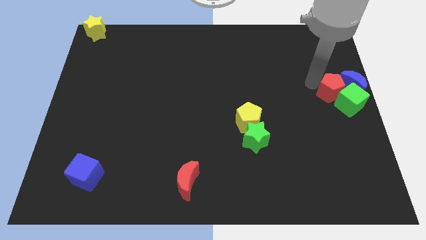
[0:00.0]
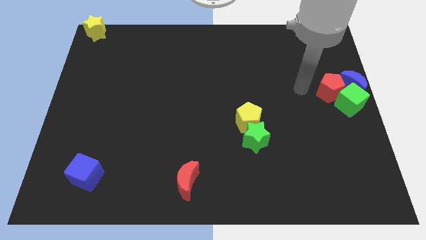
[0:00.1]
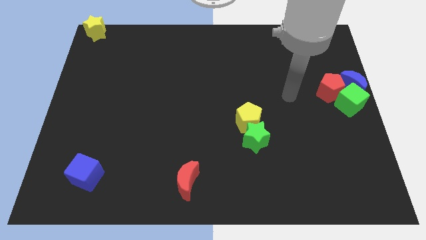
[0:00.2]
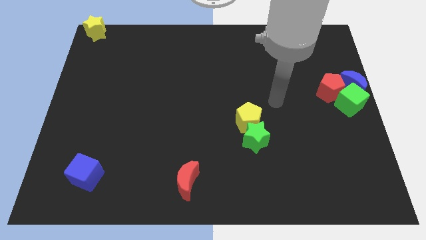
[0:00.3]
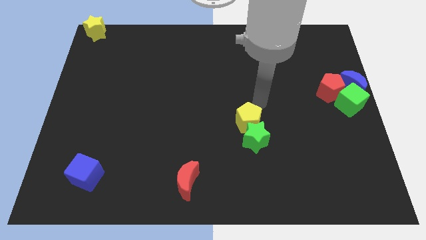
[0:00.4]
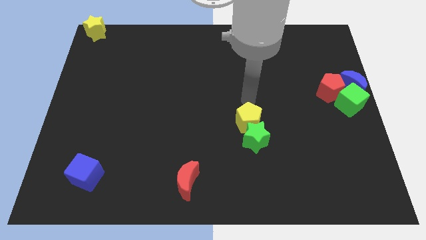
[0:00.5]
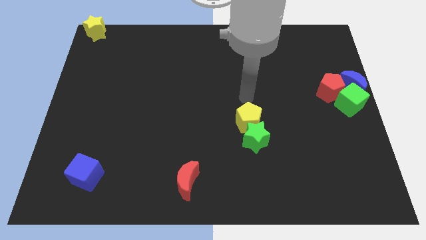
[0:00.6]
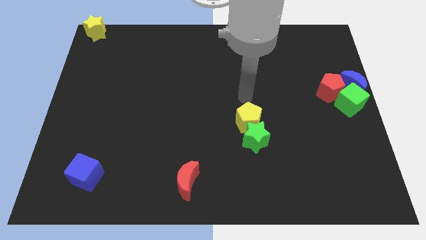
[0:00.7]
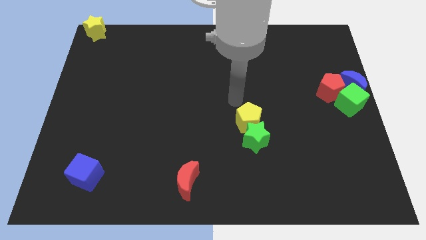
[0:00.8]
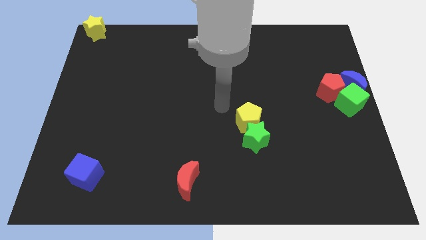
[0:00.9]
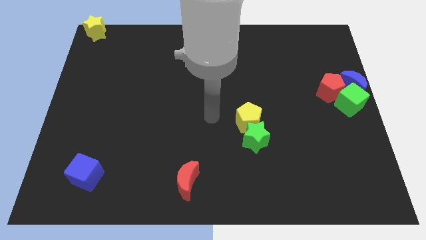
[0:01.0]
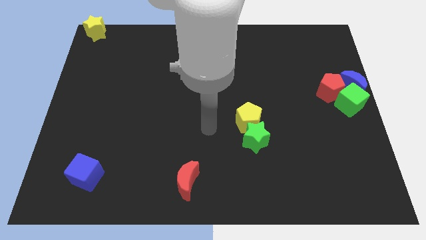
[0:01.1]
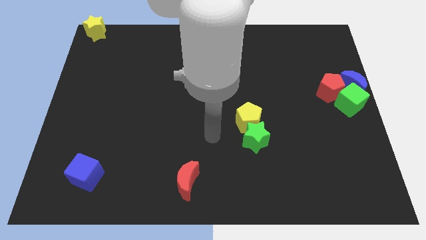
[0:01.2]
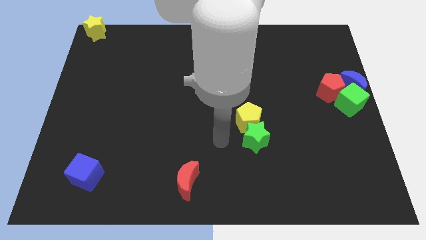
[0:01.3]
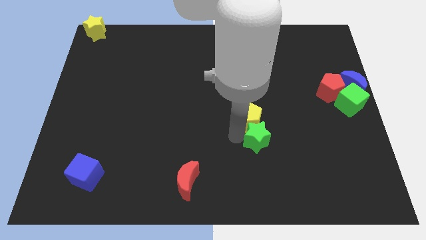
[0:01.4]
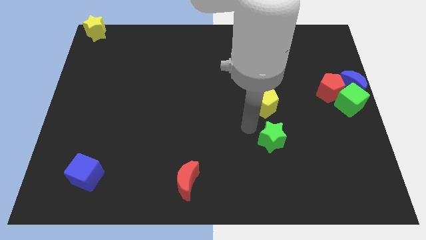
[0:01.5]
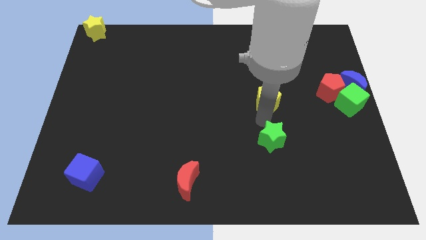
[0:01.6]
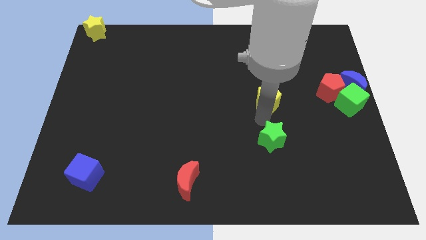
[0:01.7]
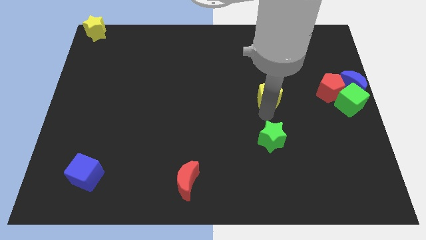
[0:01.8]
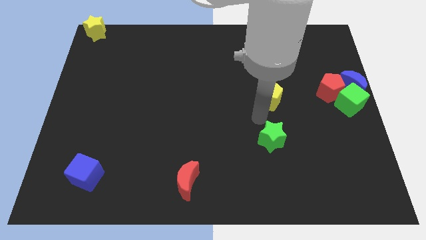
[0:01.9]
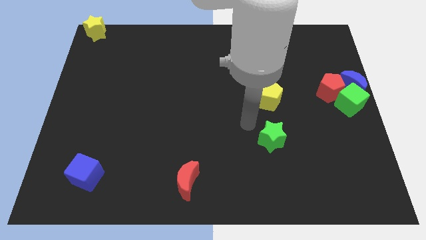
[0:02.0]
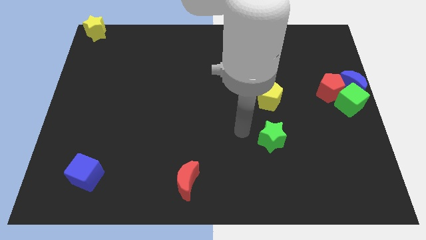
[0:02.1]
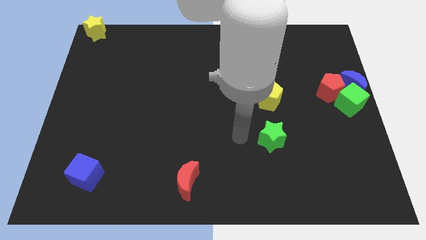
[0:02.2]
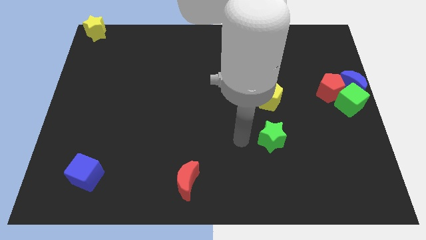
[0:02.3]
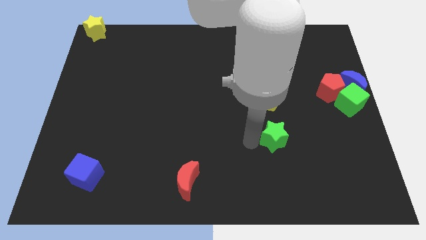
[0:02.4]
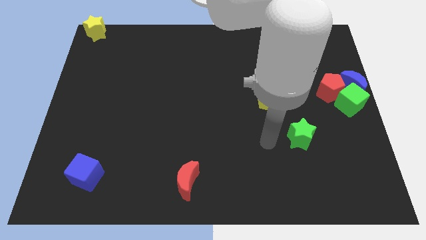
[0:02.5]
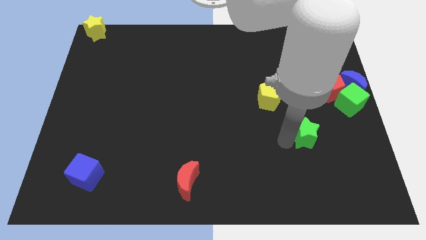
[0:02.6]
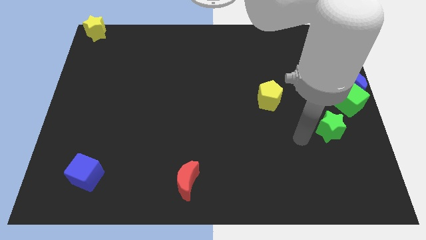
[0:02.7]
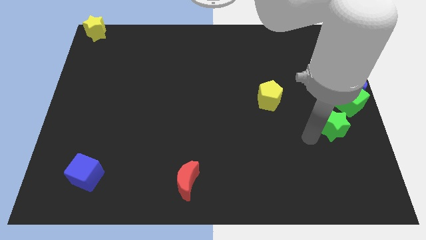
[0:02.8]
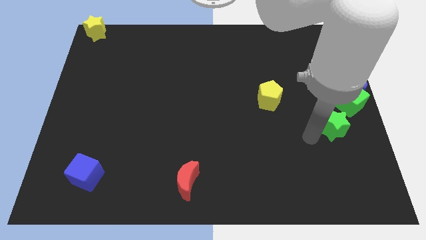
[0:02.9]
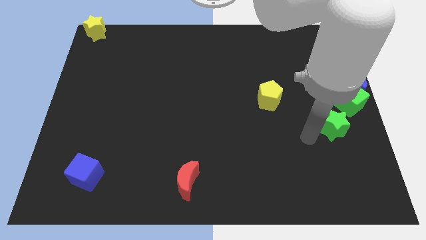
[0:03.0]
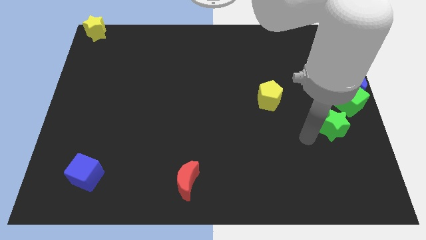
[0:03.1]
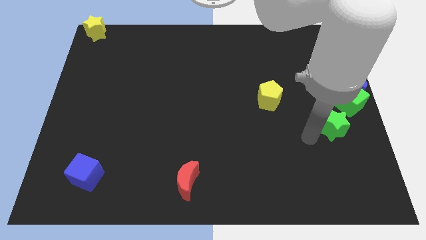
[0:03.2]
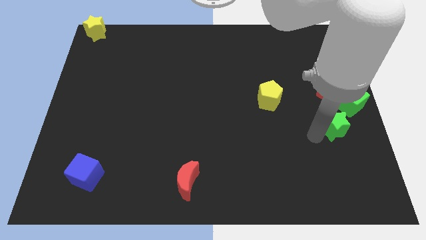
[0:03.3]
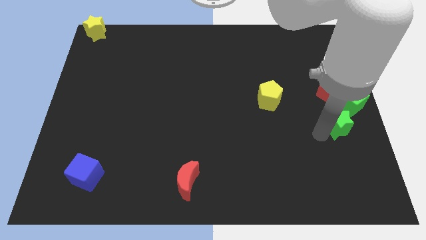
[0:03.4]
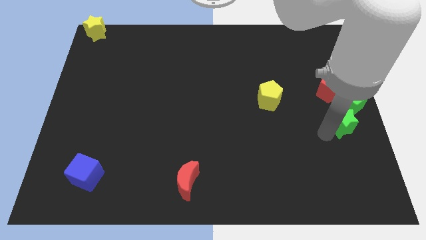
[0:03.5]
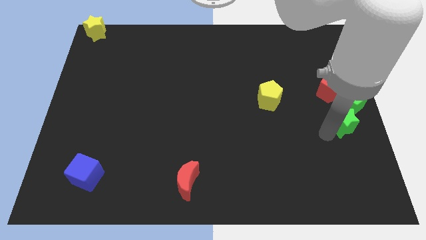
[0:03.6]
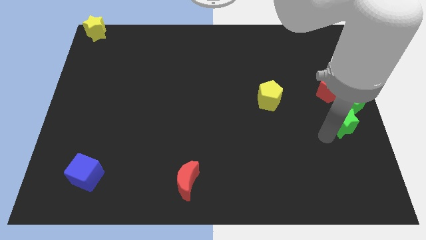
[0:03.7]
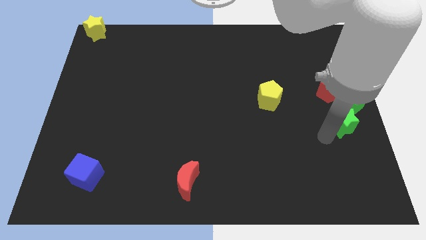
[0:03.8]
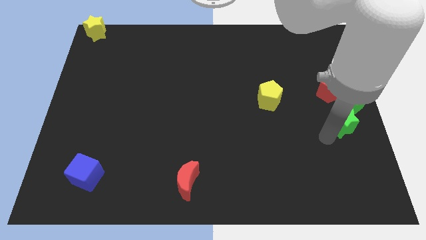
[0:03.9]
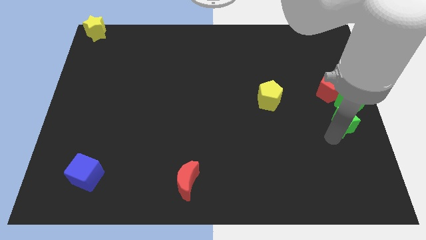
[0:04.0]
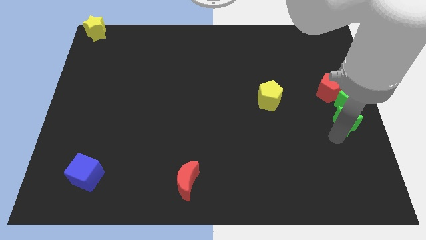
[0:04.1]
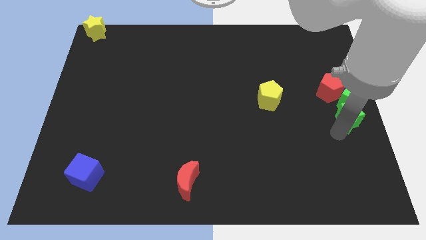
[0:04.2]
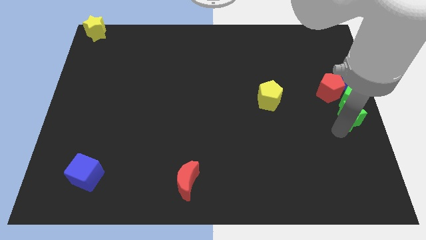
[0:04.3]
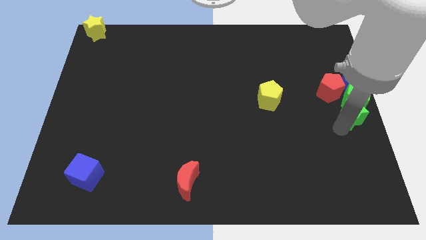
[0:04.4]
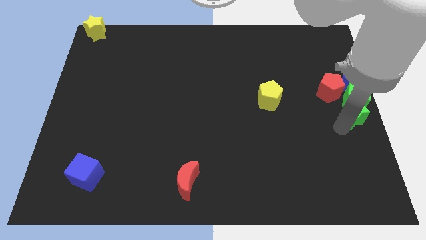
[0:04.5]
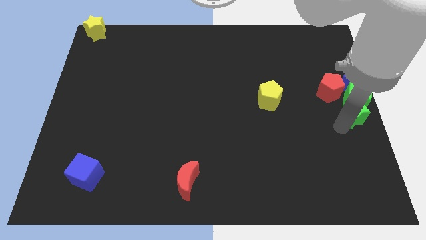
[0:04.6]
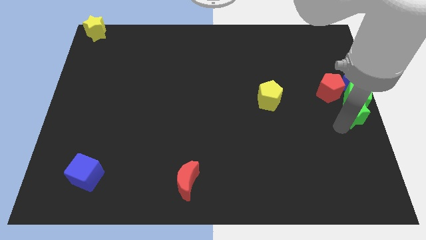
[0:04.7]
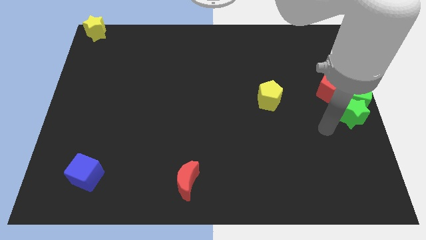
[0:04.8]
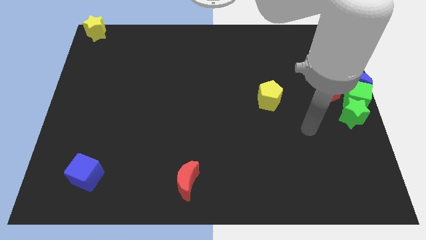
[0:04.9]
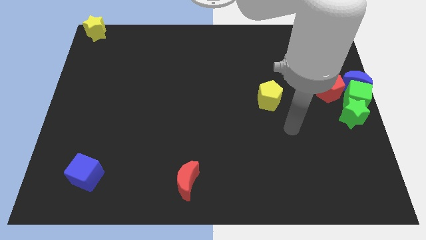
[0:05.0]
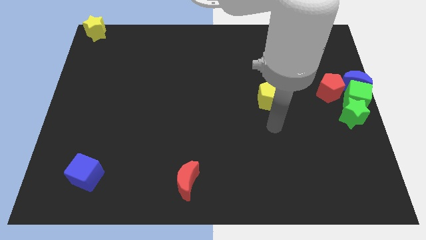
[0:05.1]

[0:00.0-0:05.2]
push the green star to the bottom of the green cube

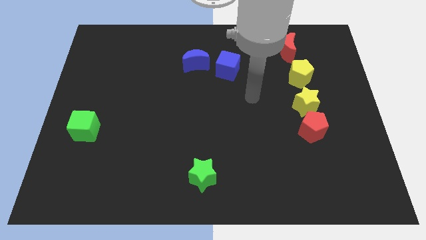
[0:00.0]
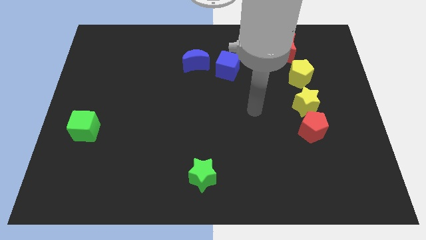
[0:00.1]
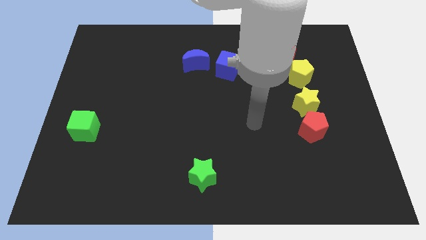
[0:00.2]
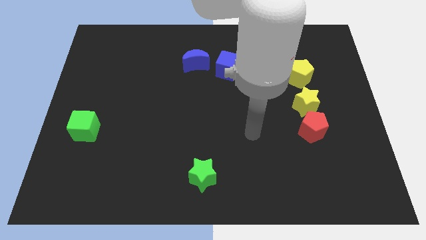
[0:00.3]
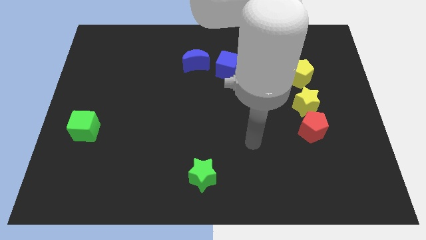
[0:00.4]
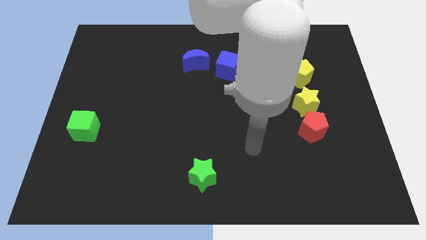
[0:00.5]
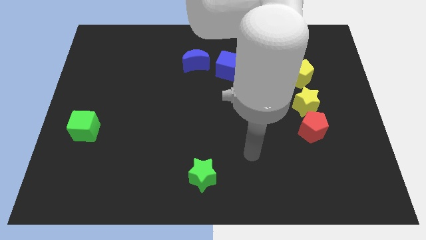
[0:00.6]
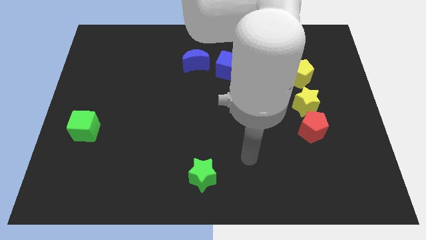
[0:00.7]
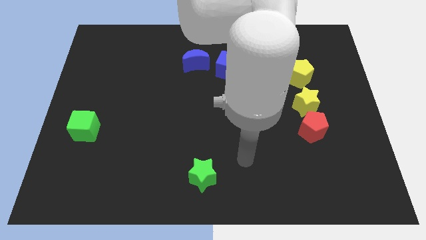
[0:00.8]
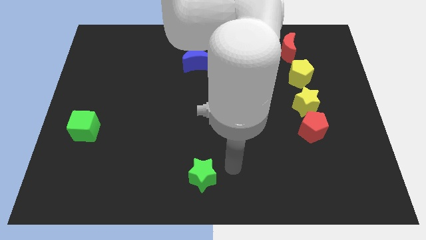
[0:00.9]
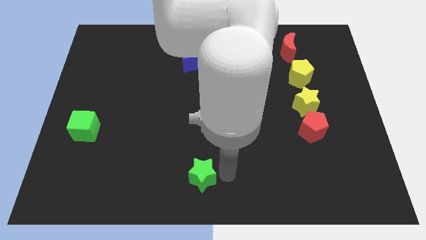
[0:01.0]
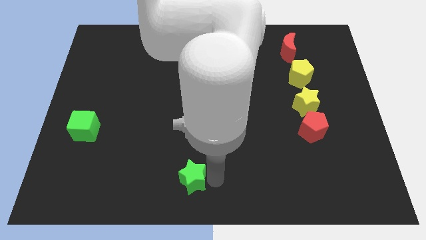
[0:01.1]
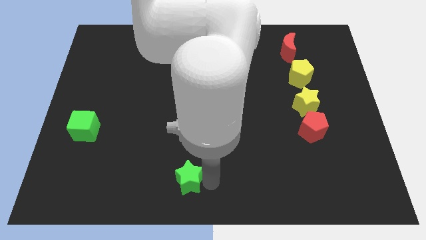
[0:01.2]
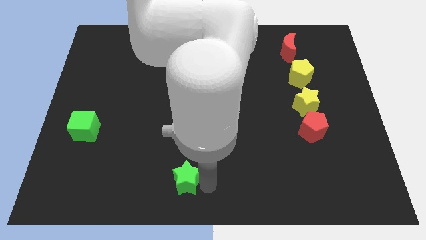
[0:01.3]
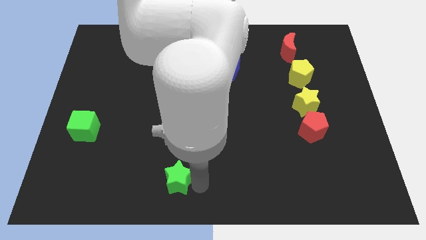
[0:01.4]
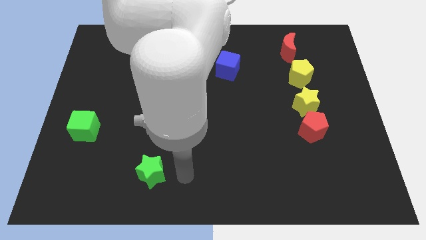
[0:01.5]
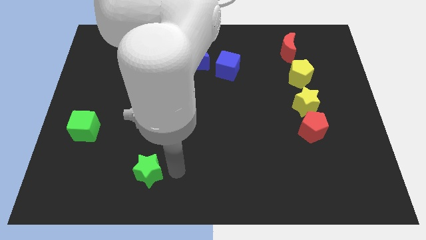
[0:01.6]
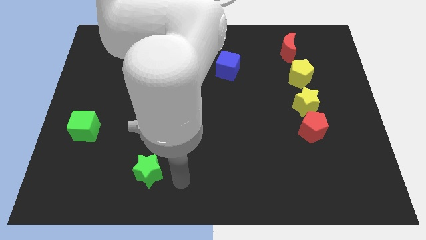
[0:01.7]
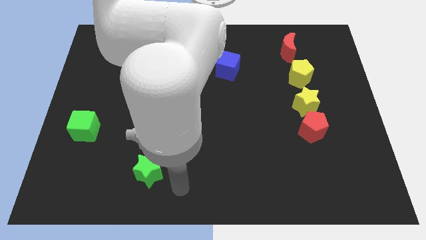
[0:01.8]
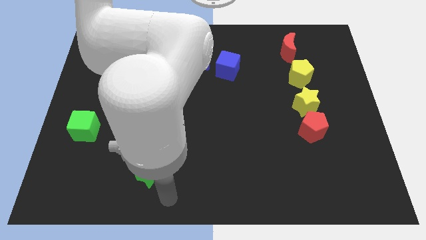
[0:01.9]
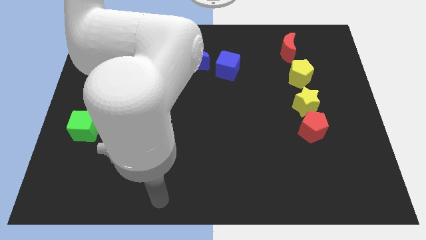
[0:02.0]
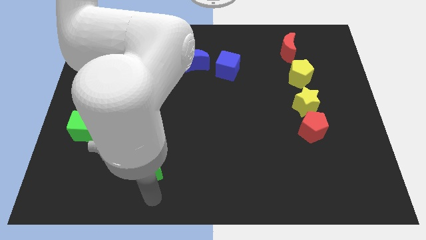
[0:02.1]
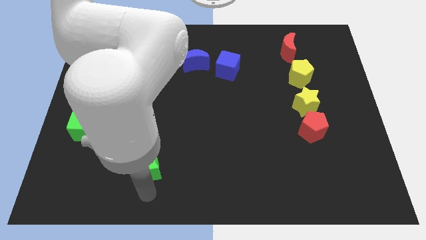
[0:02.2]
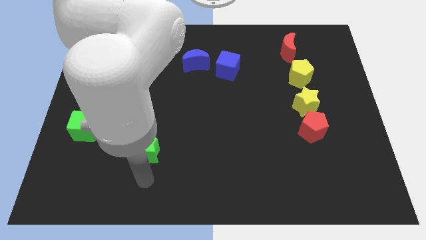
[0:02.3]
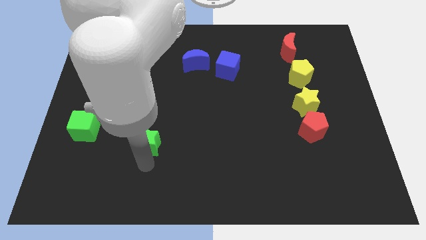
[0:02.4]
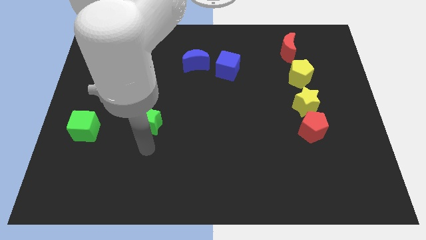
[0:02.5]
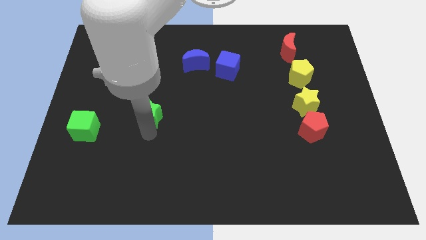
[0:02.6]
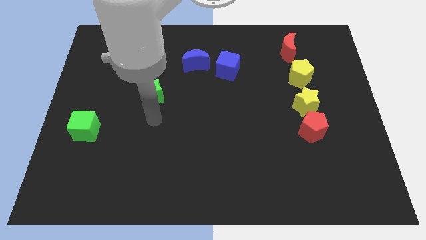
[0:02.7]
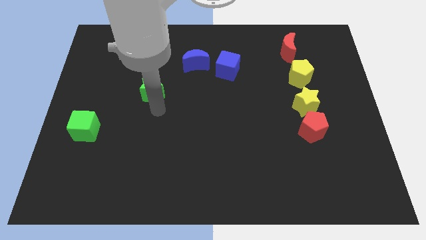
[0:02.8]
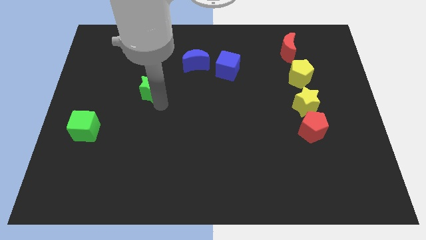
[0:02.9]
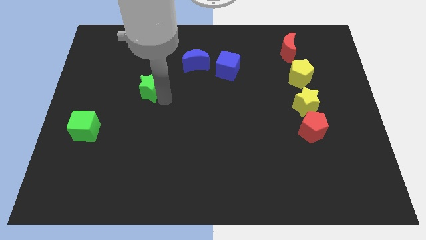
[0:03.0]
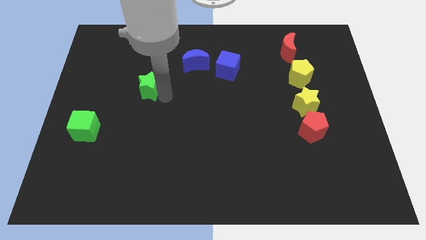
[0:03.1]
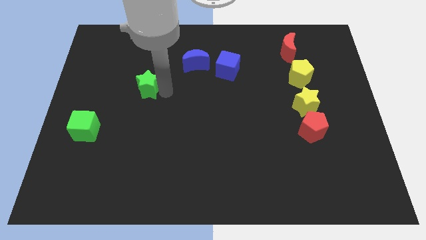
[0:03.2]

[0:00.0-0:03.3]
place green star in between green cube and blue moon

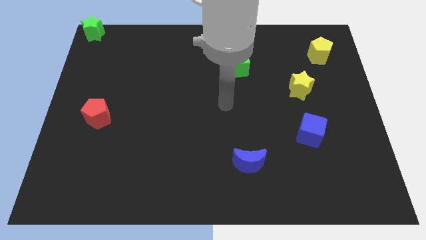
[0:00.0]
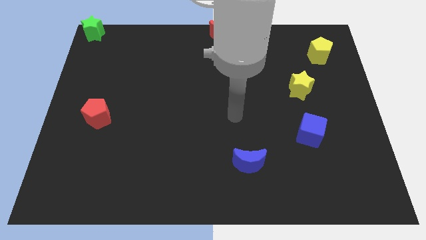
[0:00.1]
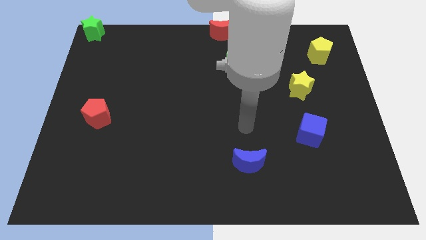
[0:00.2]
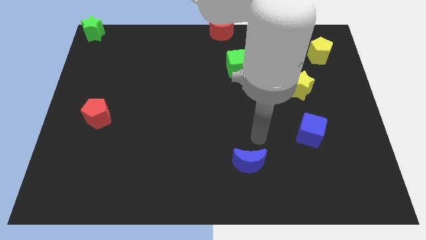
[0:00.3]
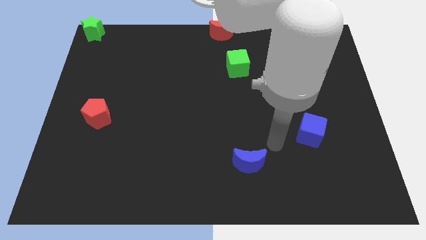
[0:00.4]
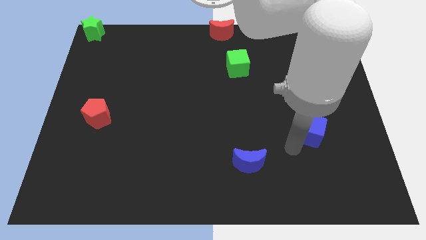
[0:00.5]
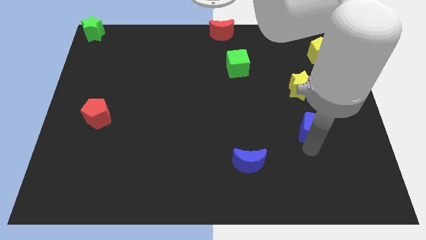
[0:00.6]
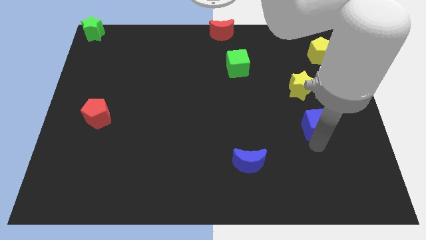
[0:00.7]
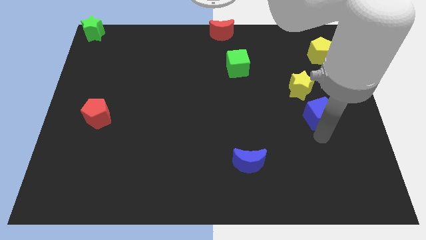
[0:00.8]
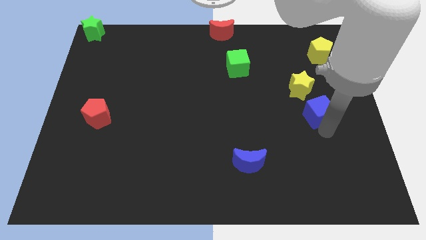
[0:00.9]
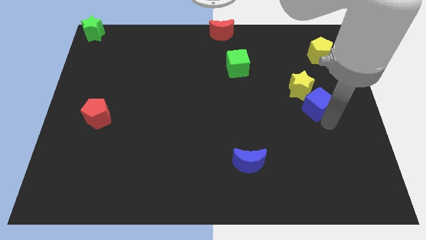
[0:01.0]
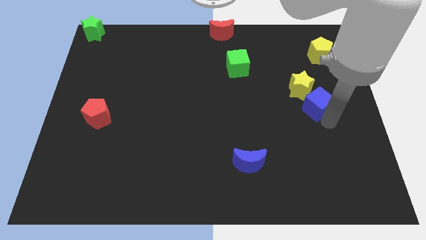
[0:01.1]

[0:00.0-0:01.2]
push the blue cube towards the yellow star
